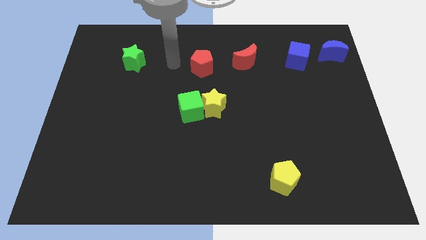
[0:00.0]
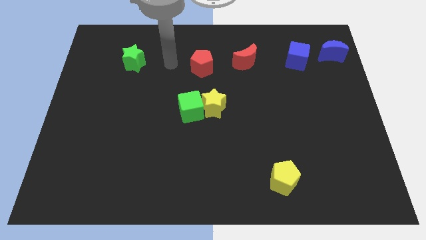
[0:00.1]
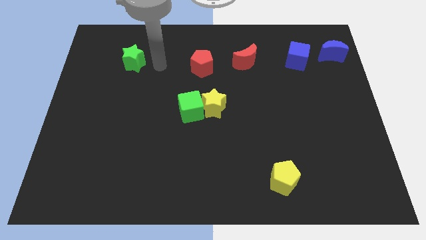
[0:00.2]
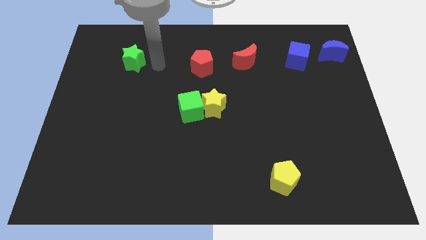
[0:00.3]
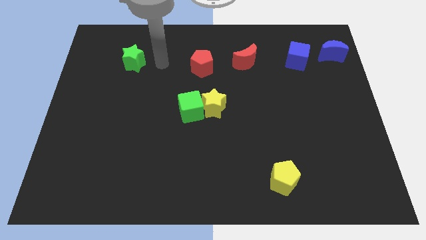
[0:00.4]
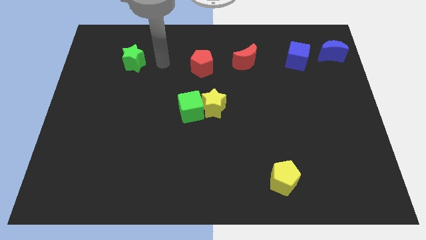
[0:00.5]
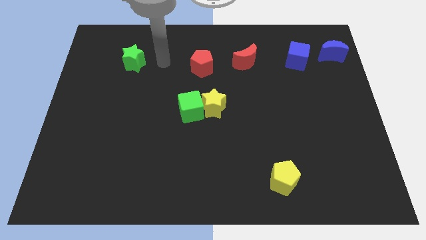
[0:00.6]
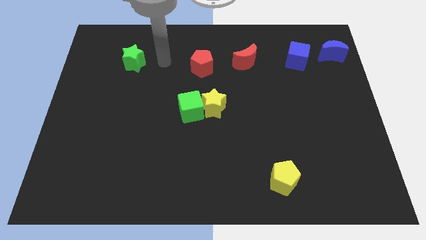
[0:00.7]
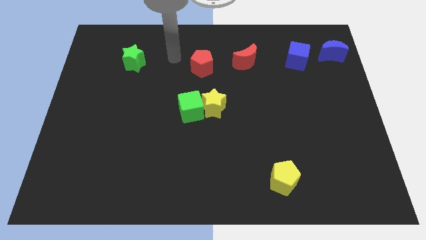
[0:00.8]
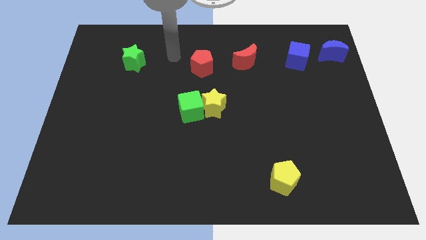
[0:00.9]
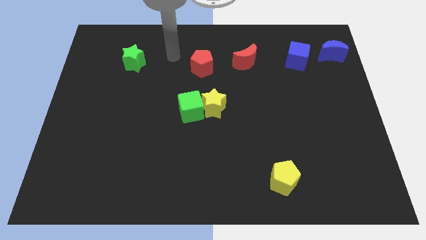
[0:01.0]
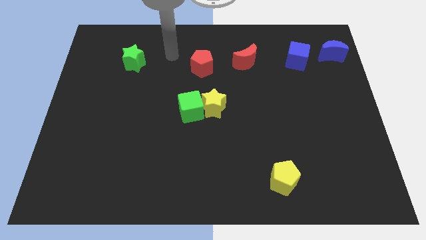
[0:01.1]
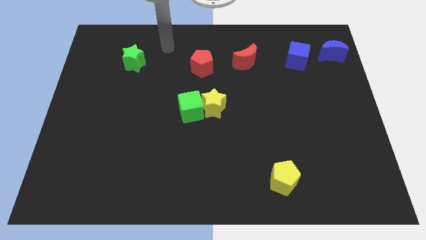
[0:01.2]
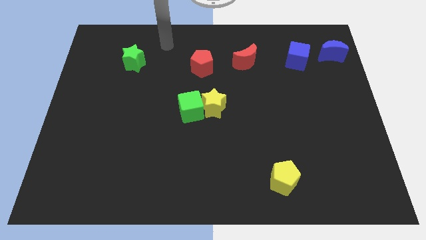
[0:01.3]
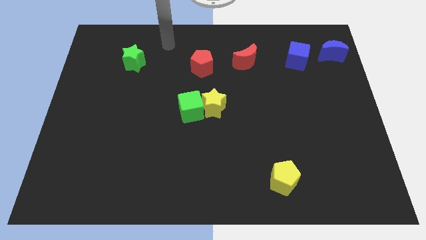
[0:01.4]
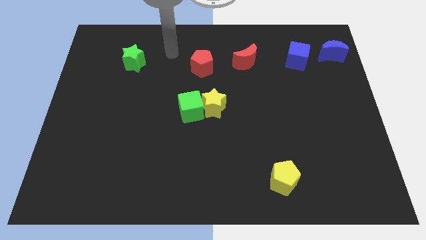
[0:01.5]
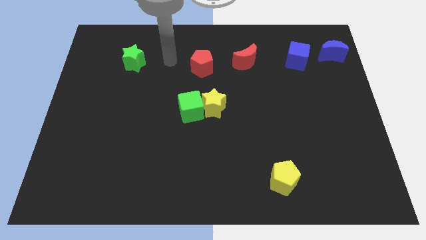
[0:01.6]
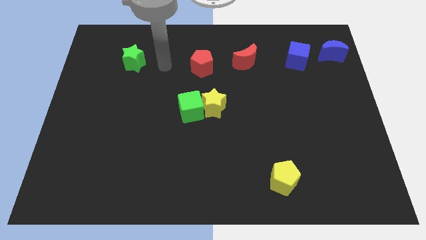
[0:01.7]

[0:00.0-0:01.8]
move your arm in between the red pentagon and green star

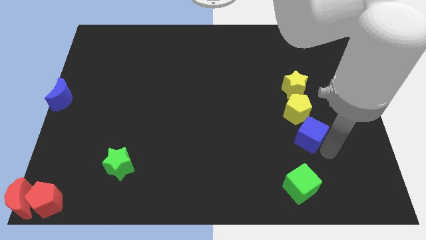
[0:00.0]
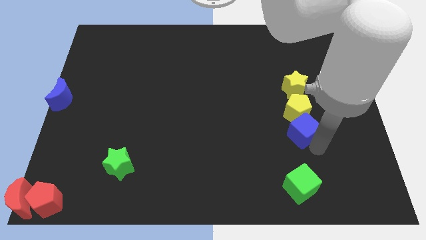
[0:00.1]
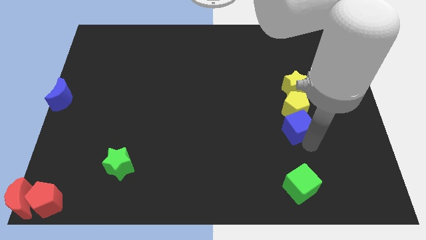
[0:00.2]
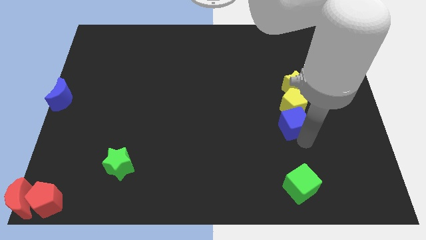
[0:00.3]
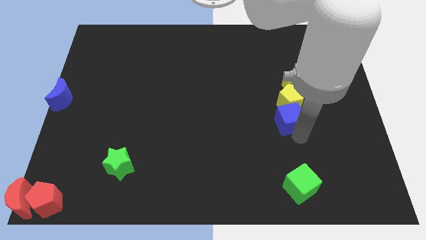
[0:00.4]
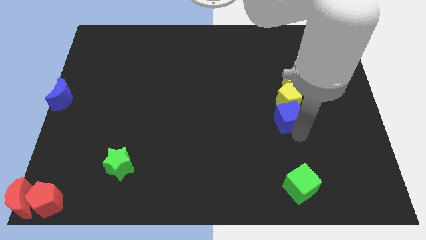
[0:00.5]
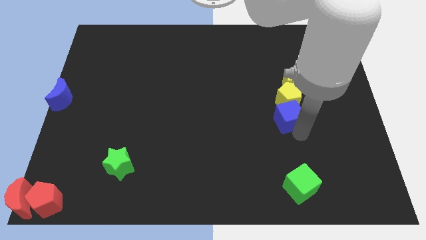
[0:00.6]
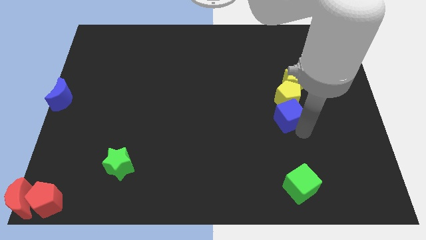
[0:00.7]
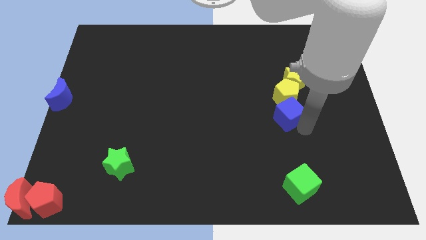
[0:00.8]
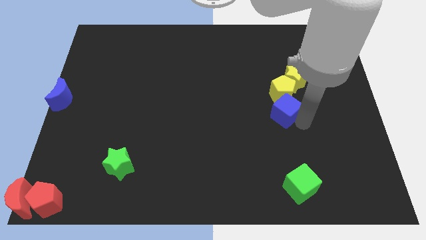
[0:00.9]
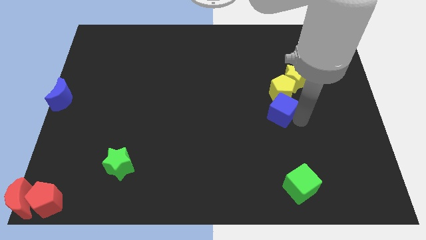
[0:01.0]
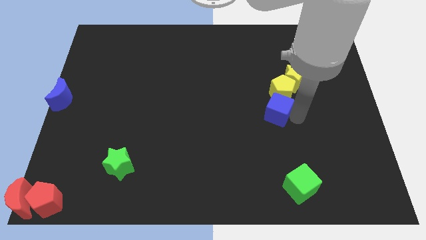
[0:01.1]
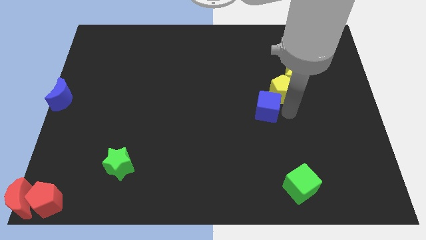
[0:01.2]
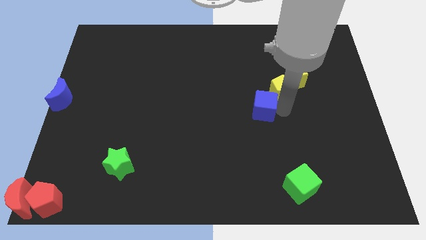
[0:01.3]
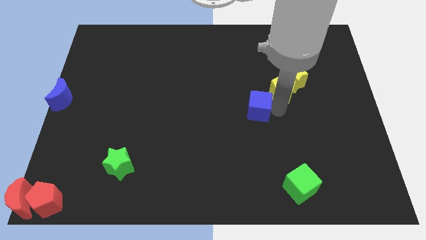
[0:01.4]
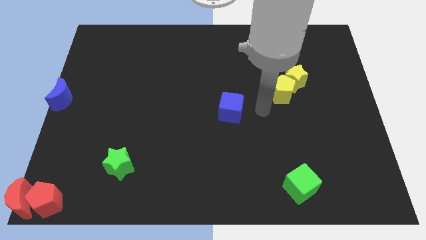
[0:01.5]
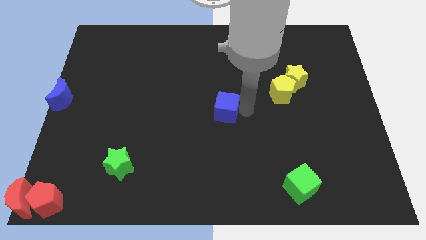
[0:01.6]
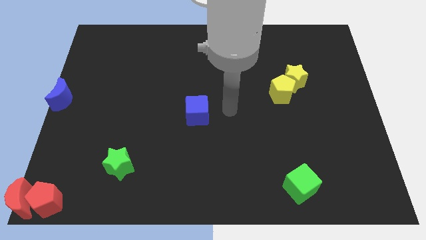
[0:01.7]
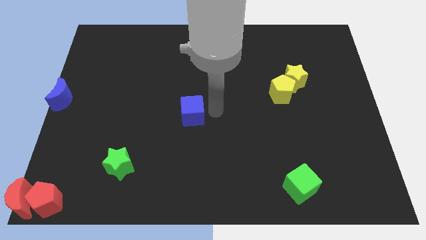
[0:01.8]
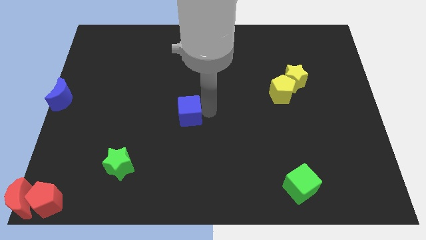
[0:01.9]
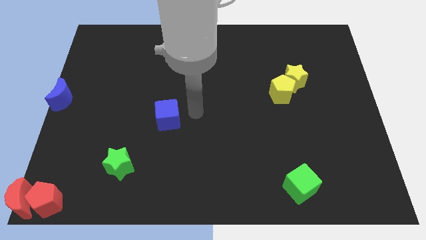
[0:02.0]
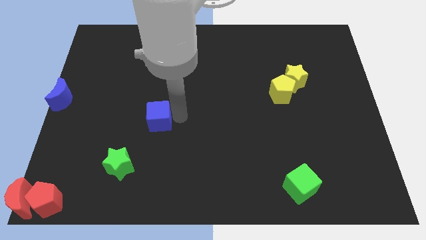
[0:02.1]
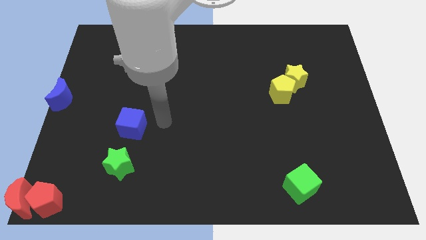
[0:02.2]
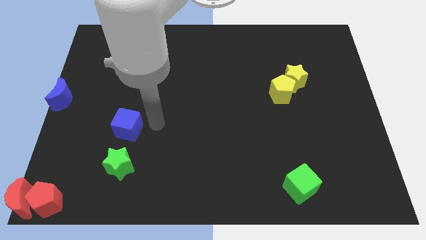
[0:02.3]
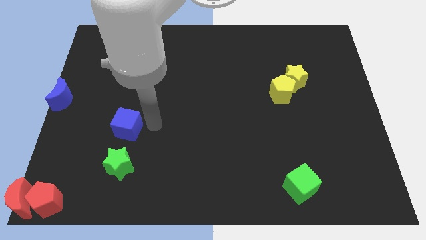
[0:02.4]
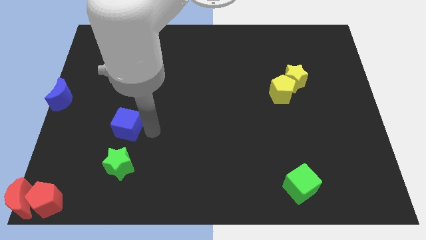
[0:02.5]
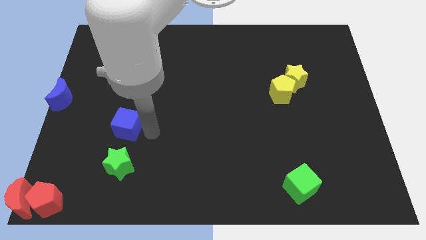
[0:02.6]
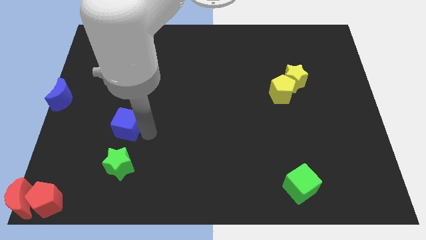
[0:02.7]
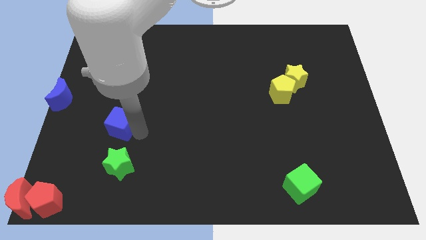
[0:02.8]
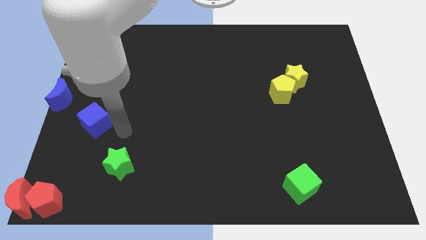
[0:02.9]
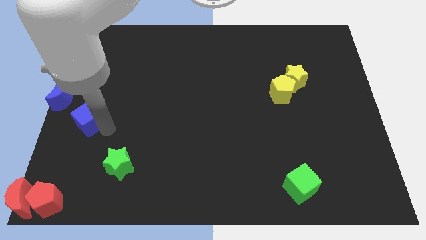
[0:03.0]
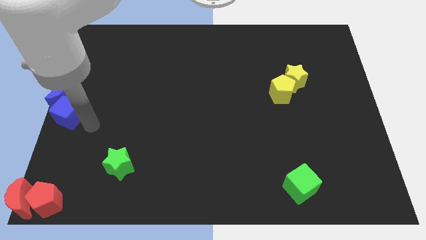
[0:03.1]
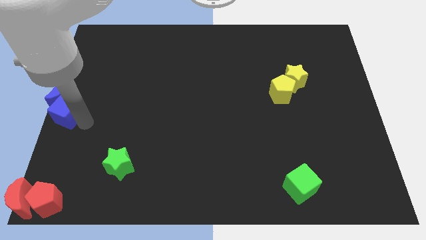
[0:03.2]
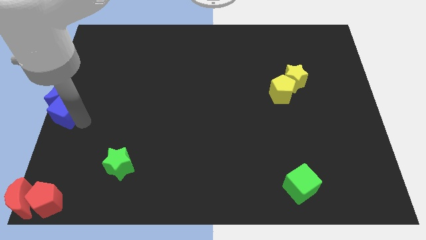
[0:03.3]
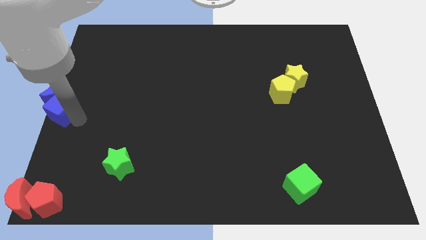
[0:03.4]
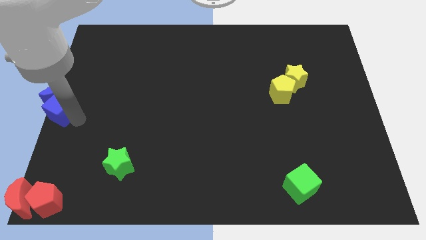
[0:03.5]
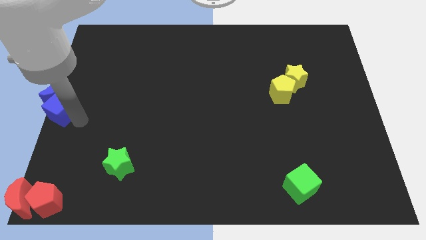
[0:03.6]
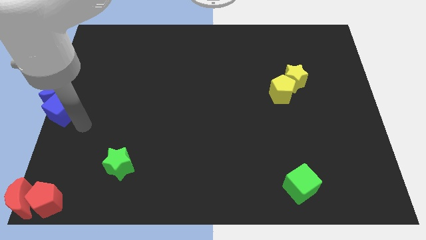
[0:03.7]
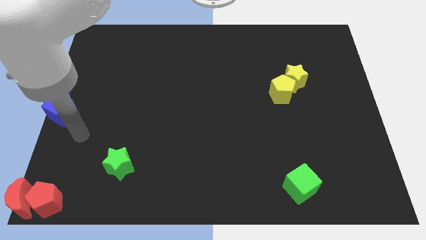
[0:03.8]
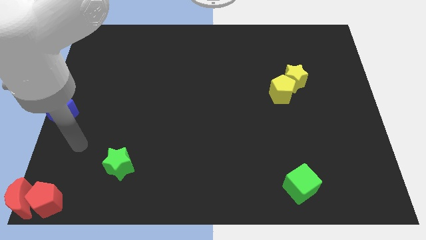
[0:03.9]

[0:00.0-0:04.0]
push the blue cube into the blue crescent

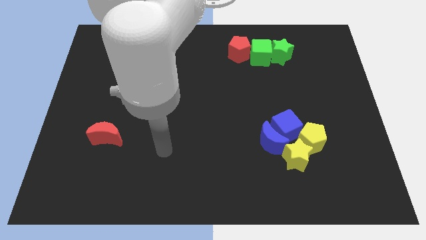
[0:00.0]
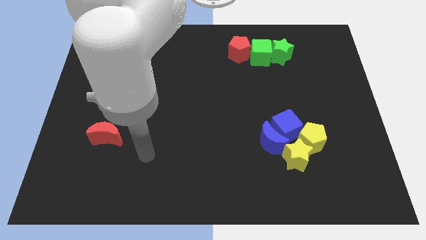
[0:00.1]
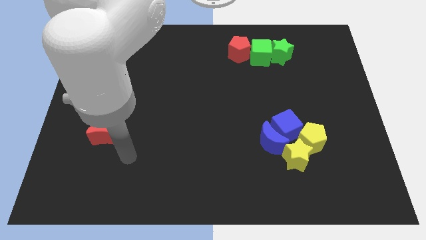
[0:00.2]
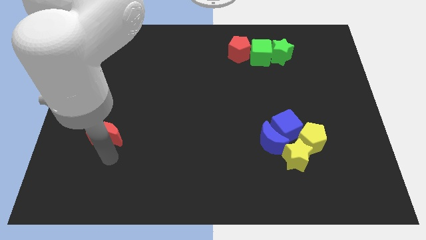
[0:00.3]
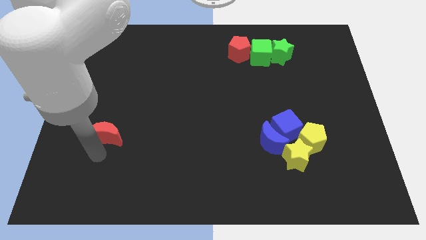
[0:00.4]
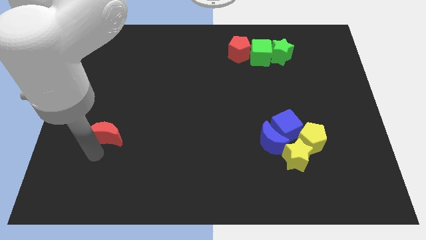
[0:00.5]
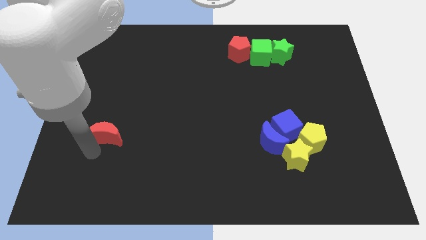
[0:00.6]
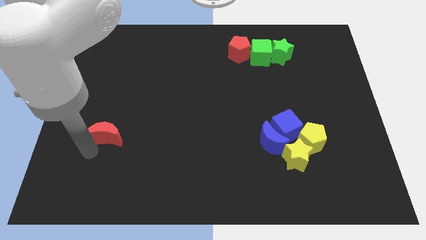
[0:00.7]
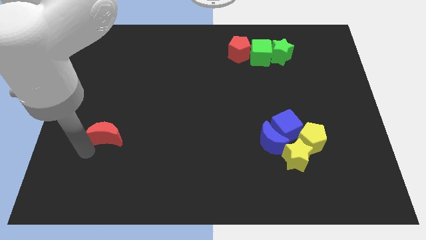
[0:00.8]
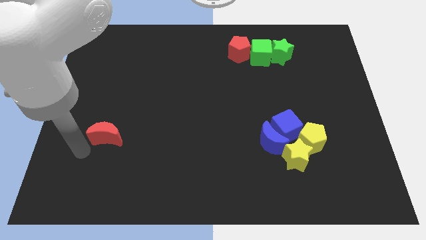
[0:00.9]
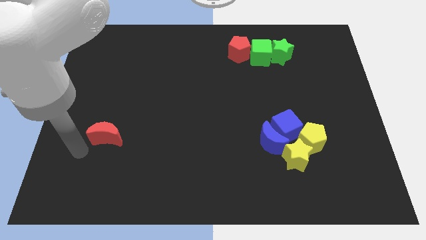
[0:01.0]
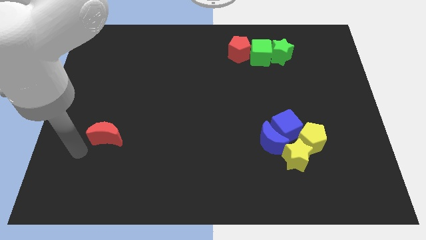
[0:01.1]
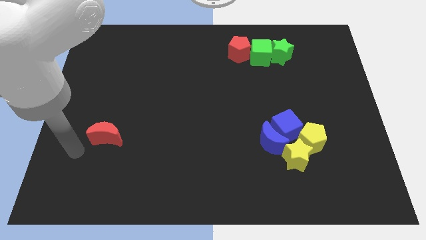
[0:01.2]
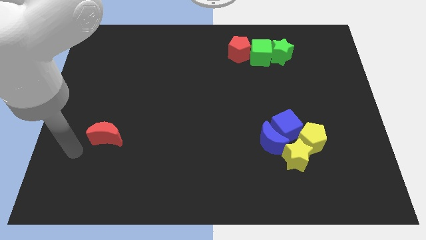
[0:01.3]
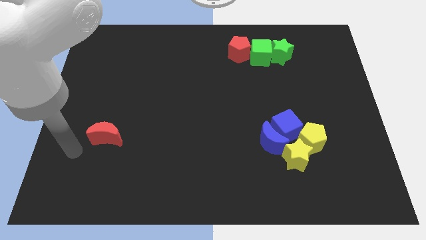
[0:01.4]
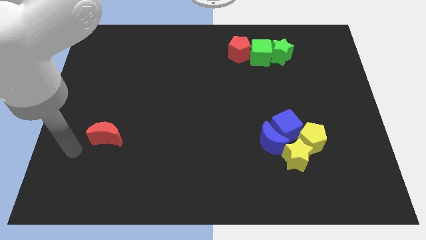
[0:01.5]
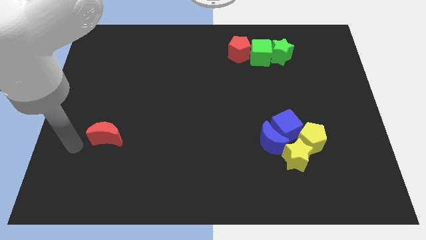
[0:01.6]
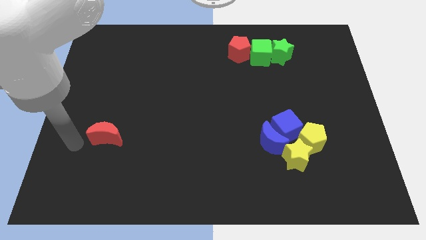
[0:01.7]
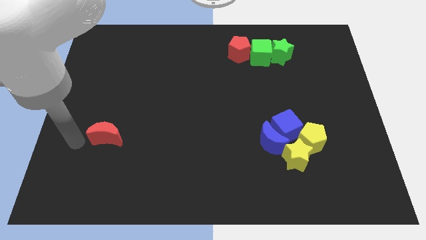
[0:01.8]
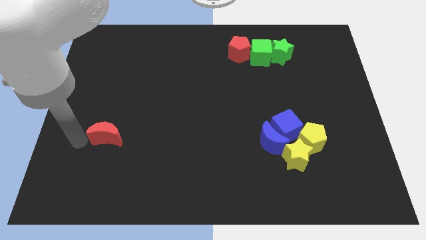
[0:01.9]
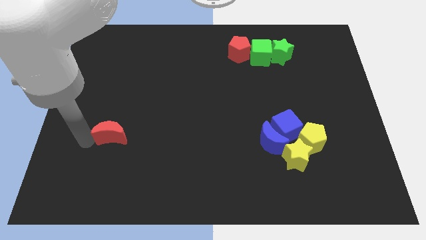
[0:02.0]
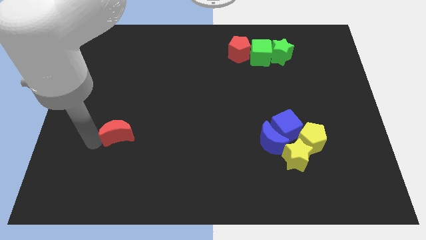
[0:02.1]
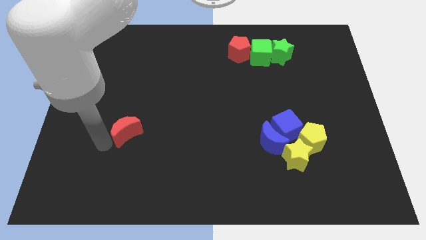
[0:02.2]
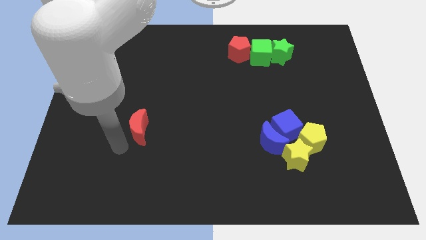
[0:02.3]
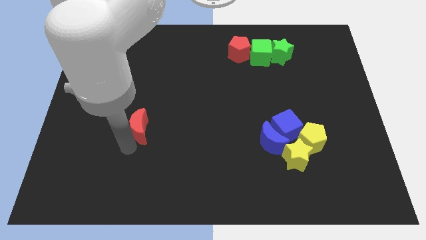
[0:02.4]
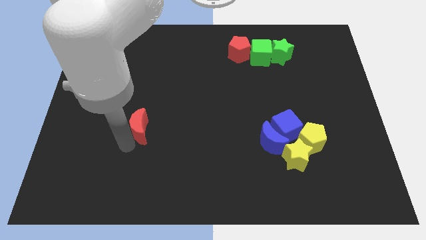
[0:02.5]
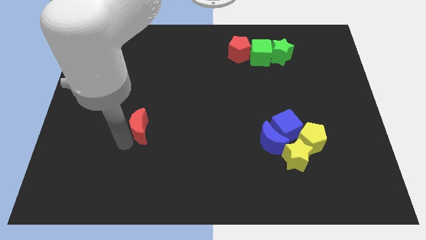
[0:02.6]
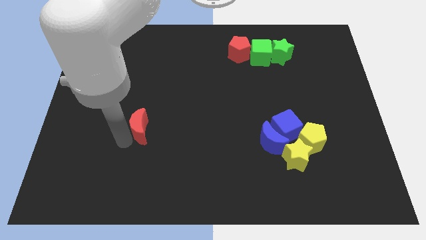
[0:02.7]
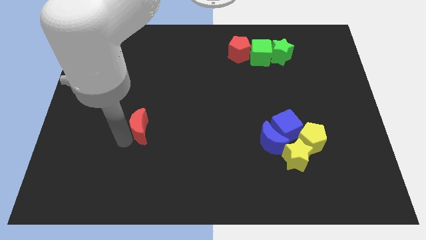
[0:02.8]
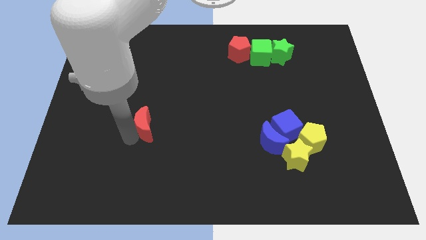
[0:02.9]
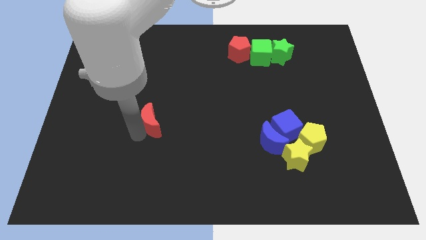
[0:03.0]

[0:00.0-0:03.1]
move the red moon towards the center

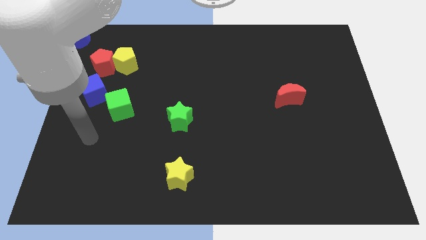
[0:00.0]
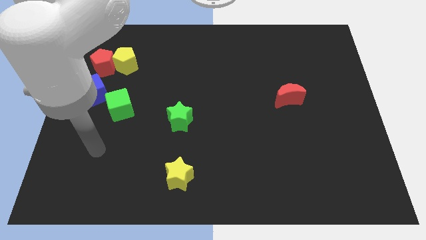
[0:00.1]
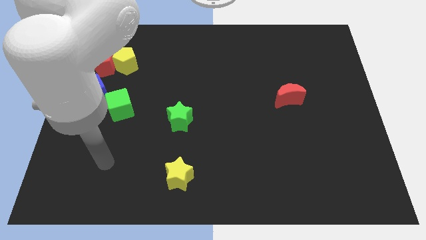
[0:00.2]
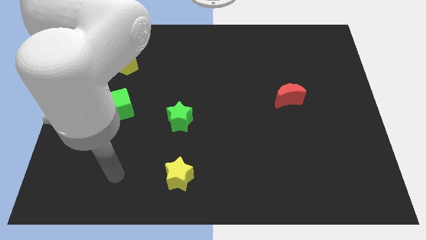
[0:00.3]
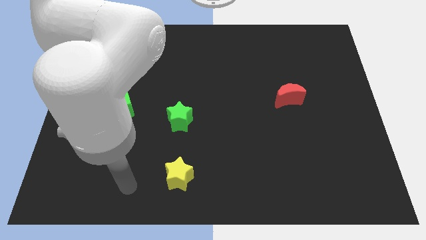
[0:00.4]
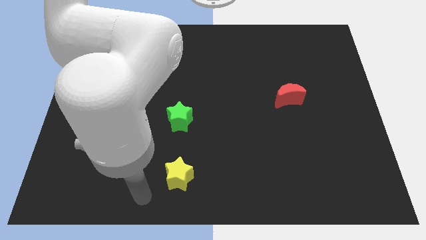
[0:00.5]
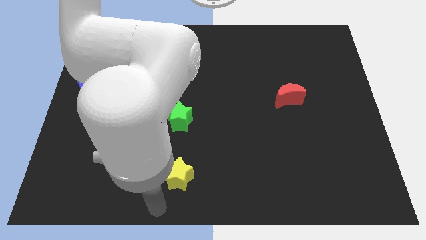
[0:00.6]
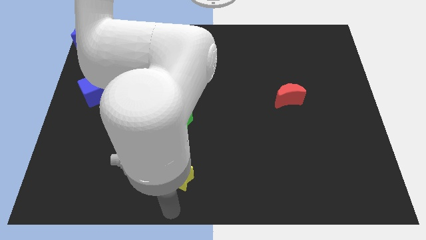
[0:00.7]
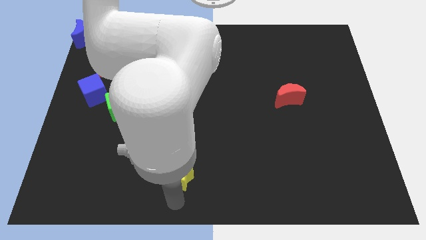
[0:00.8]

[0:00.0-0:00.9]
place the arm down to the yellow star
